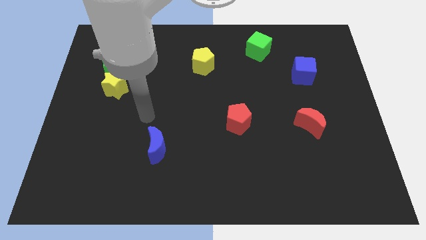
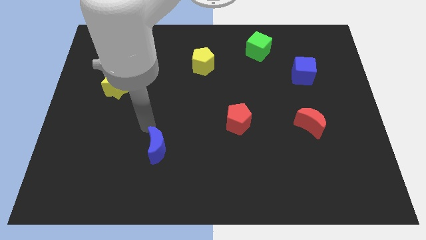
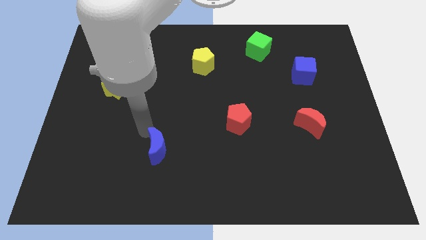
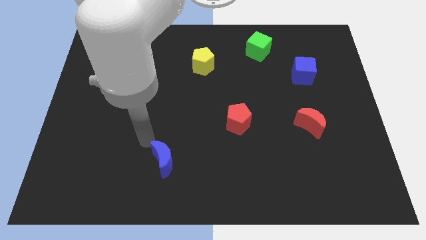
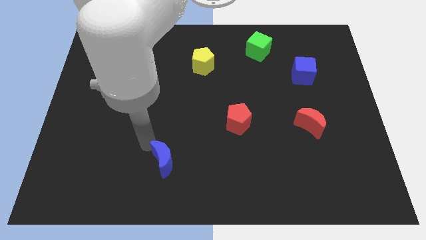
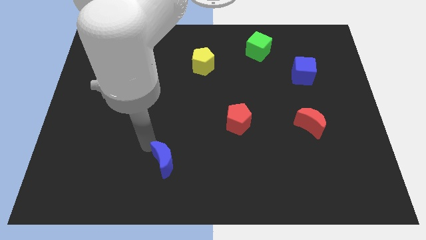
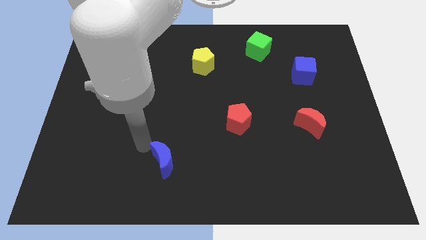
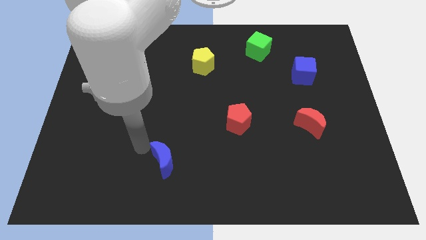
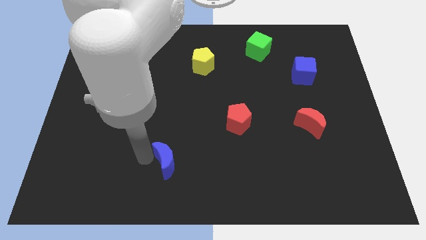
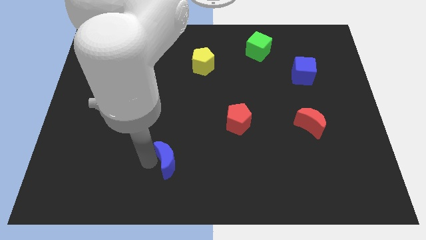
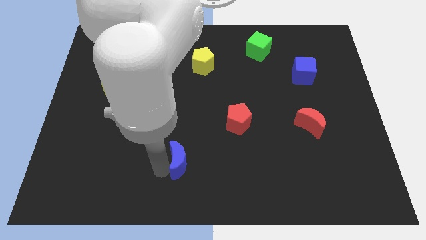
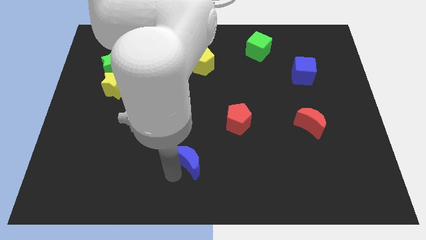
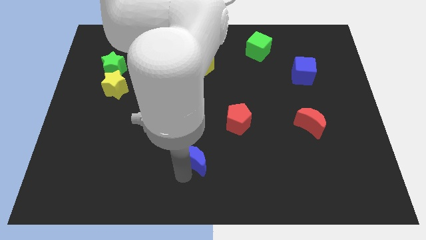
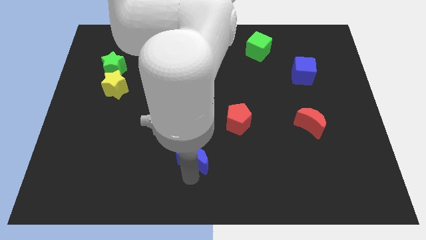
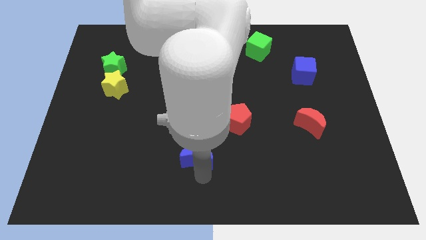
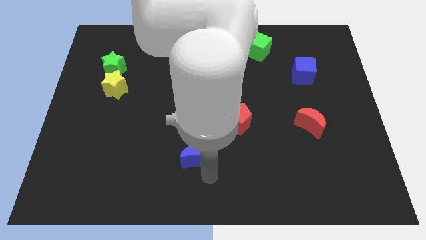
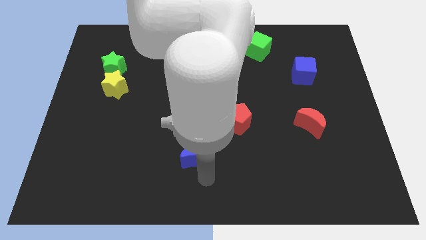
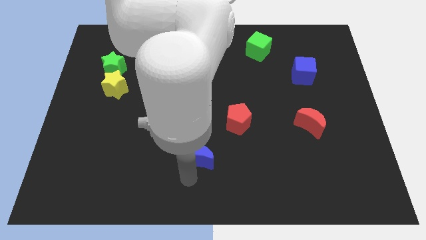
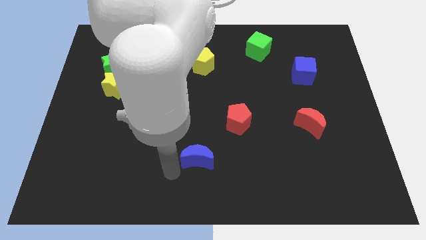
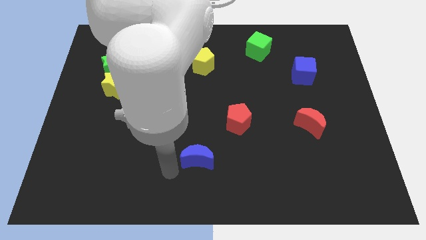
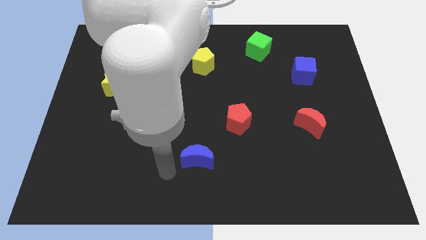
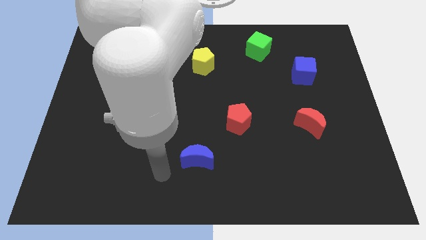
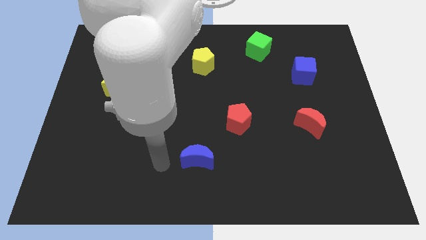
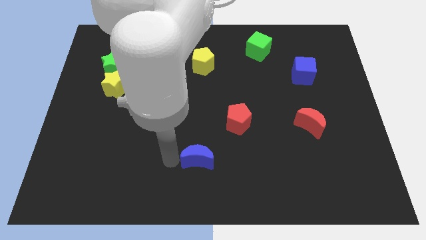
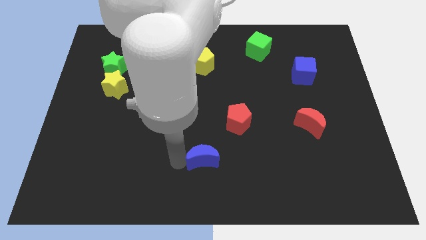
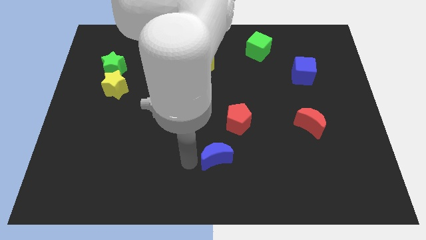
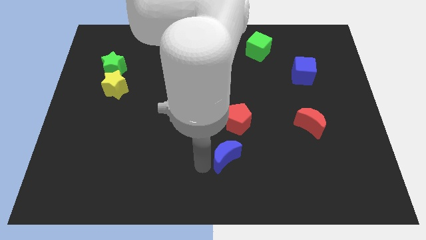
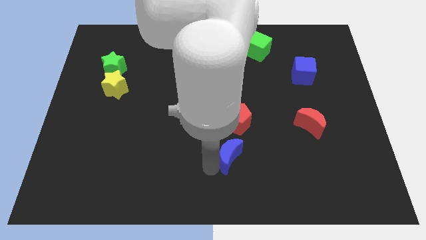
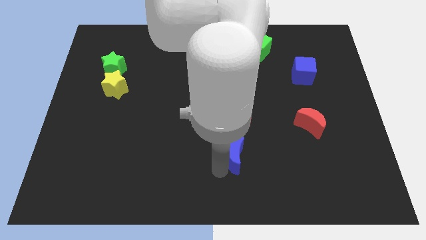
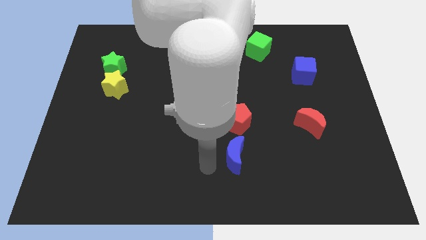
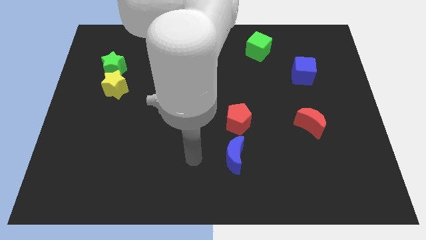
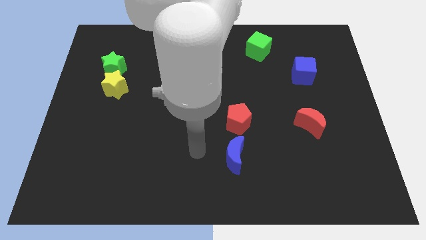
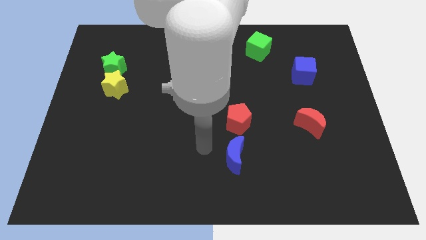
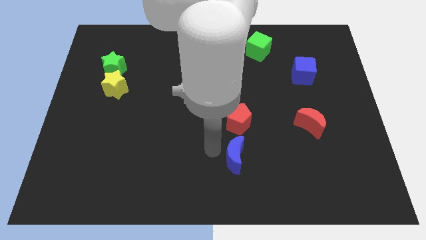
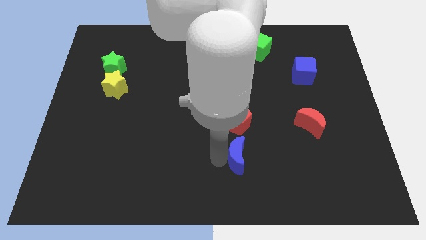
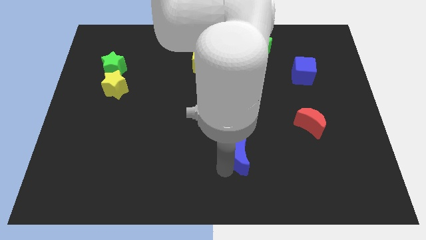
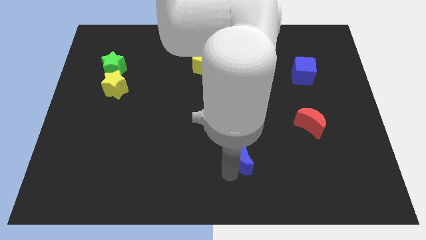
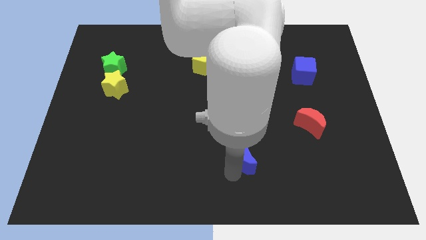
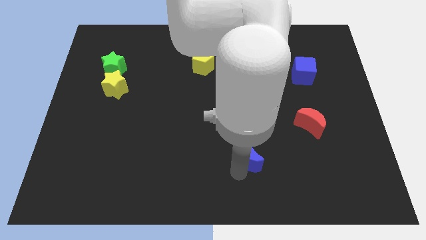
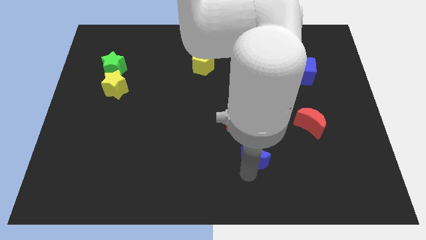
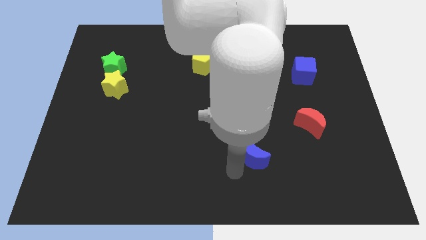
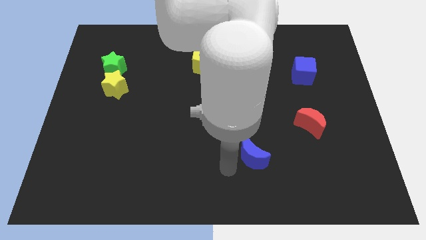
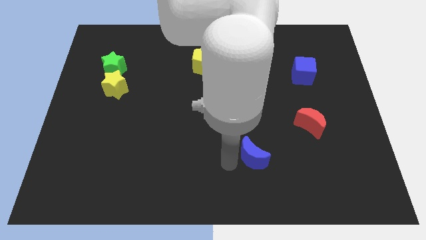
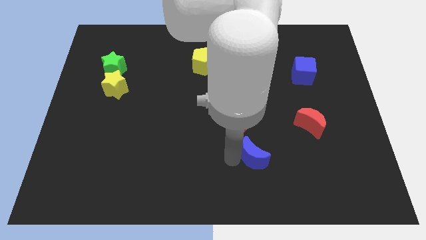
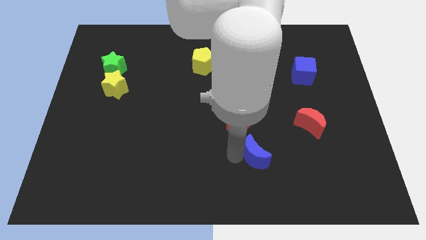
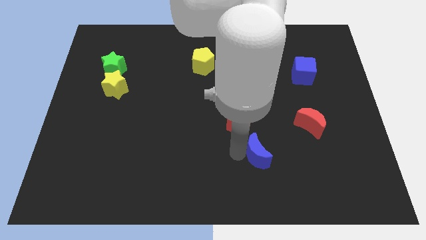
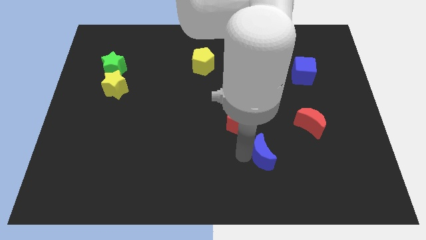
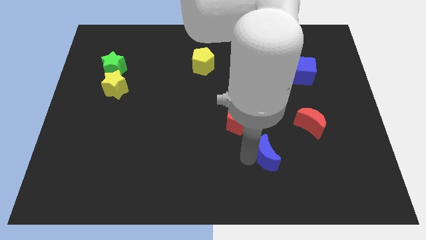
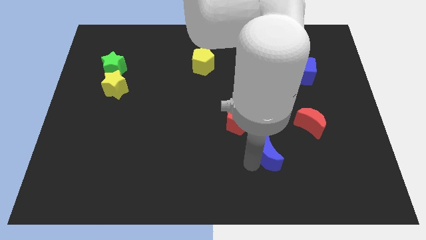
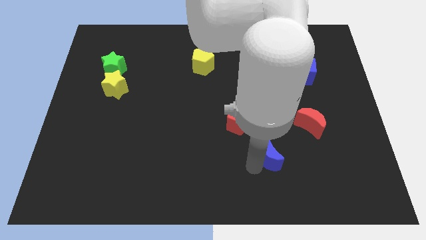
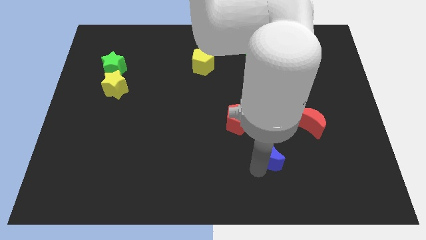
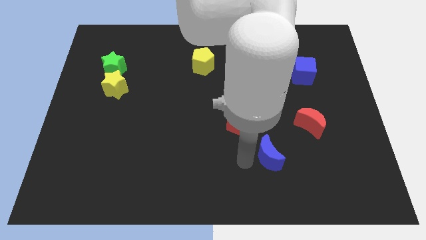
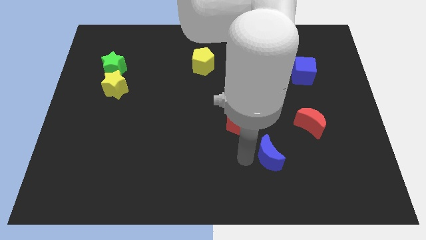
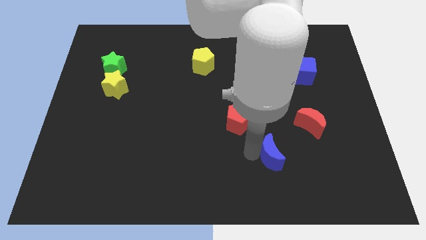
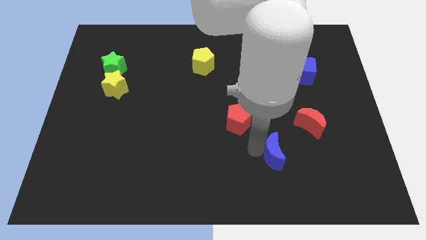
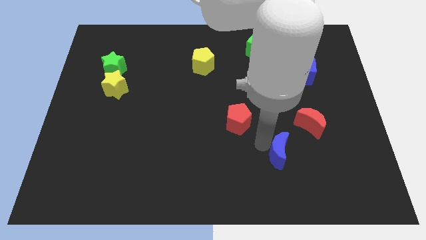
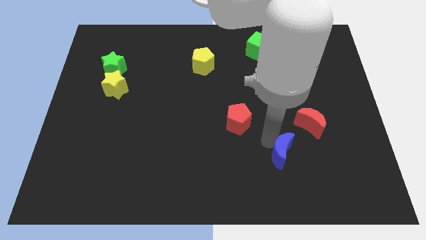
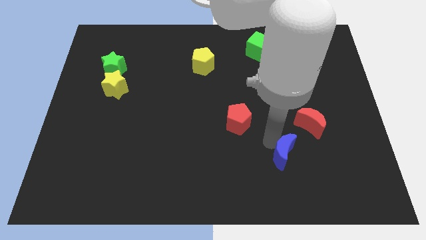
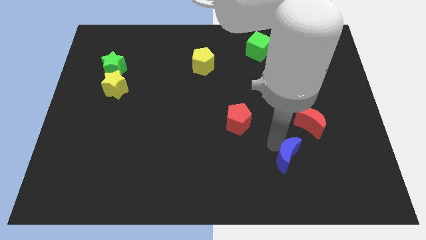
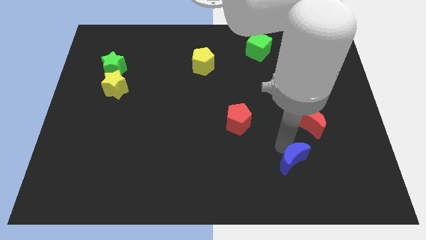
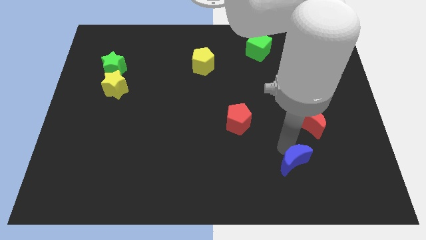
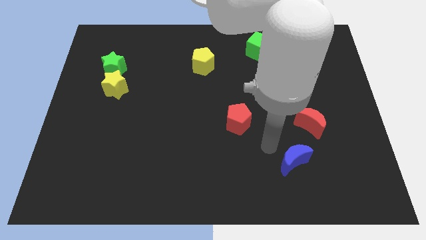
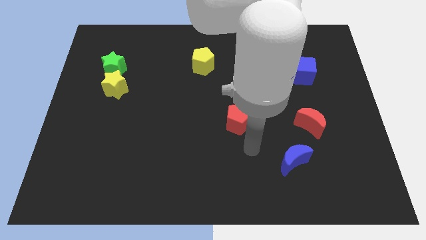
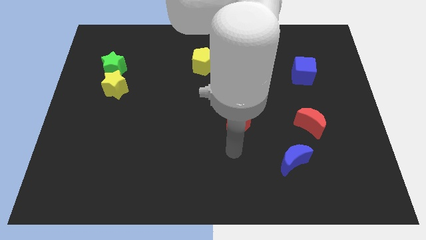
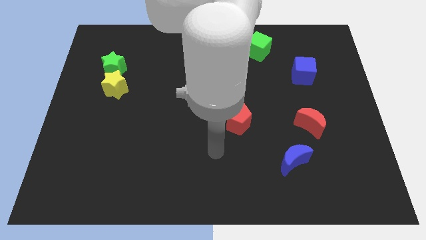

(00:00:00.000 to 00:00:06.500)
push the blue crescent towards the right of the board

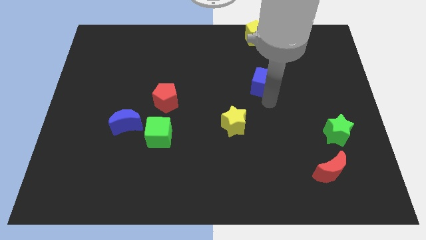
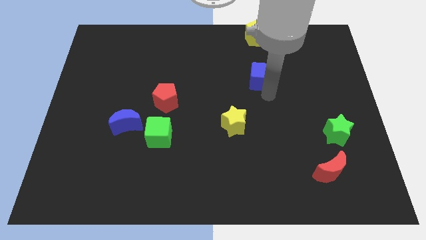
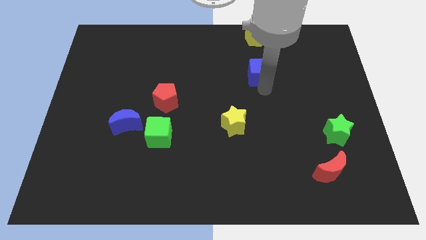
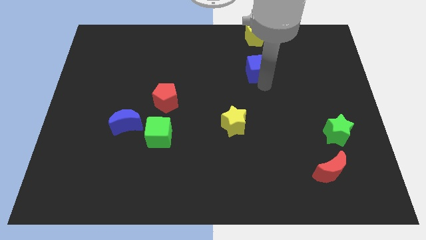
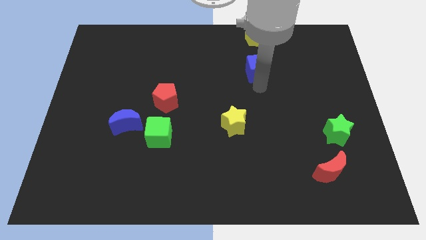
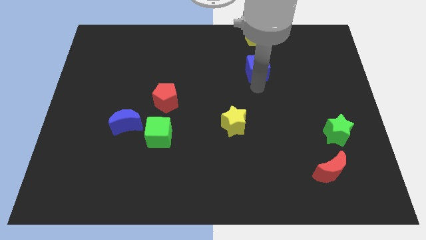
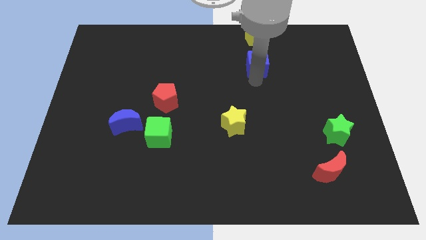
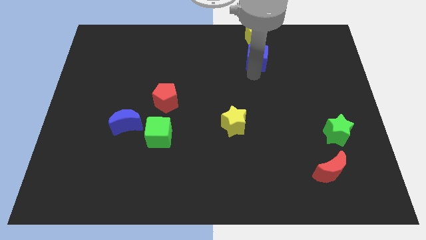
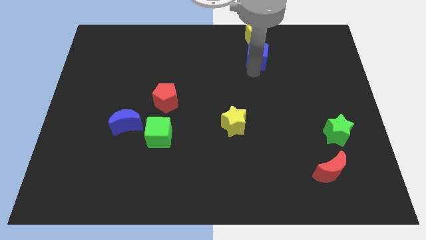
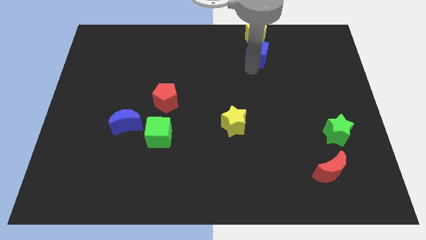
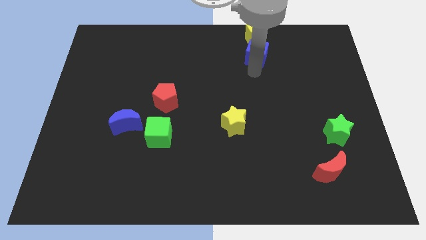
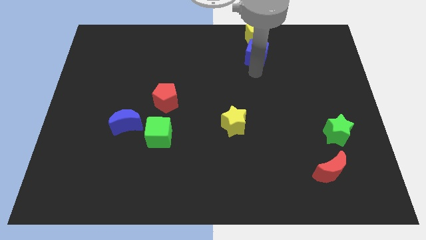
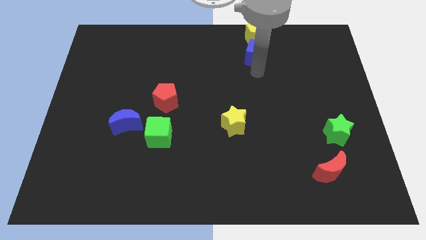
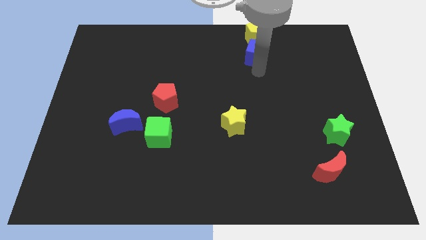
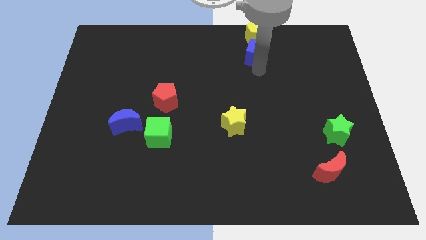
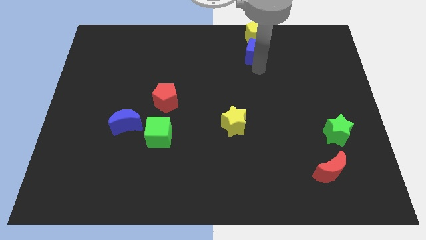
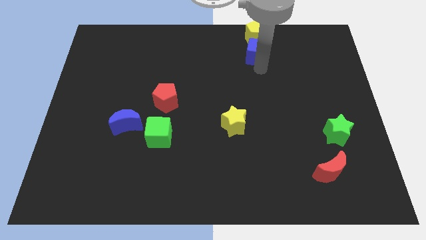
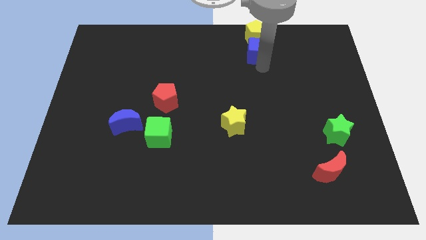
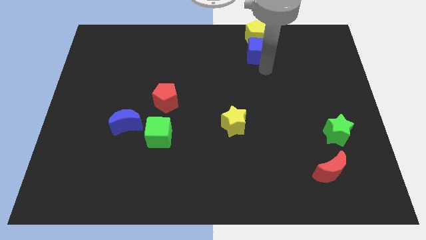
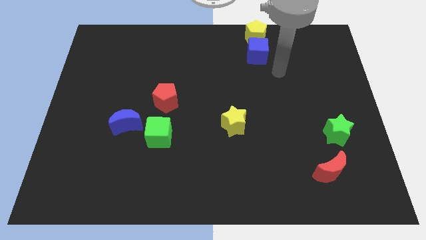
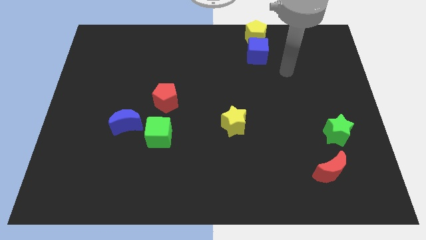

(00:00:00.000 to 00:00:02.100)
push blue cube towards yellow pentagon

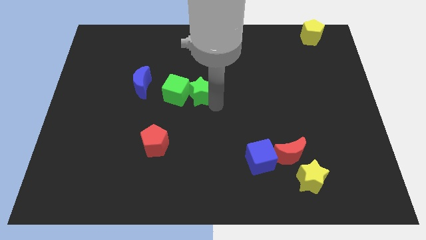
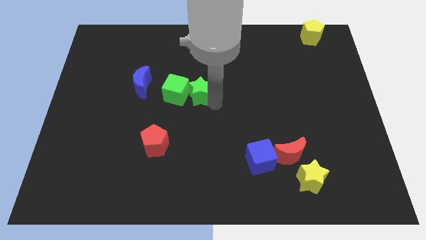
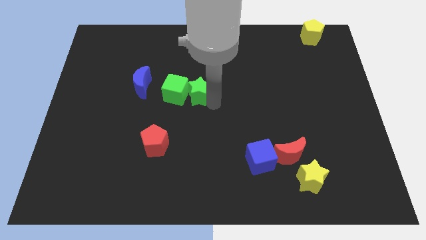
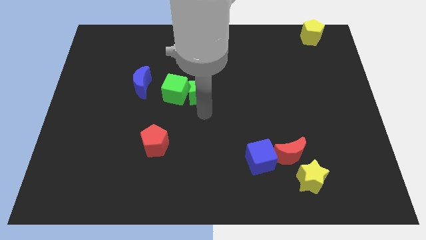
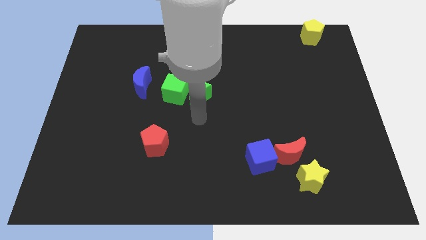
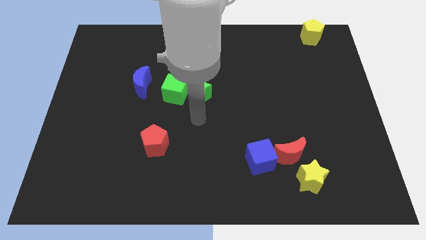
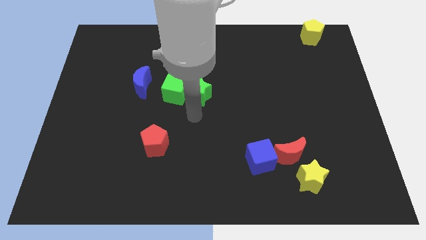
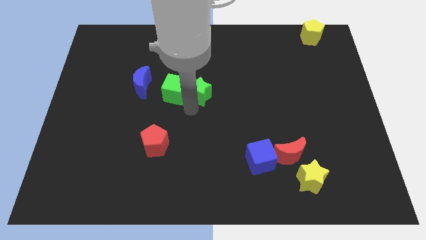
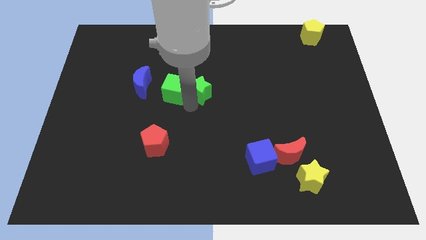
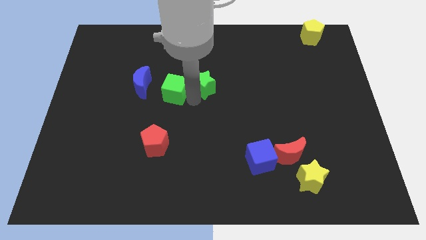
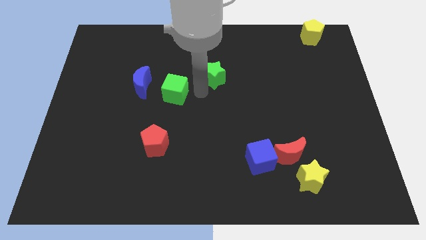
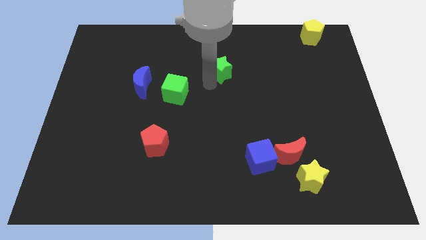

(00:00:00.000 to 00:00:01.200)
separate green star from green cube
